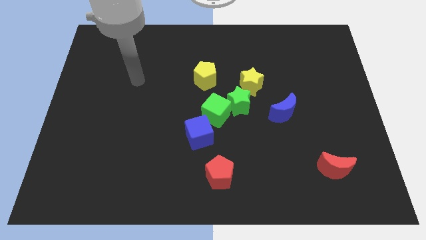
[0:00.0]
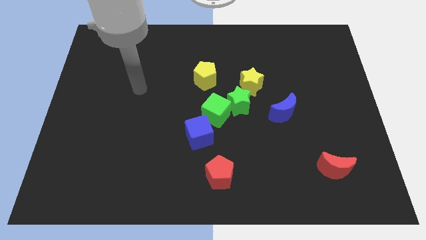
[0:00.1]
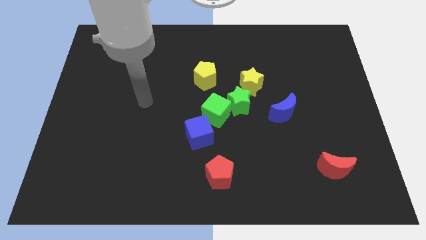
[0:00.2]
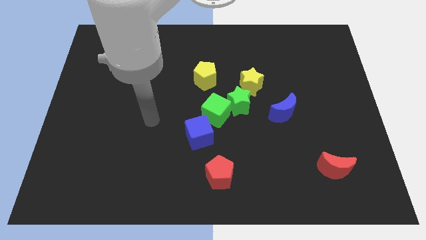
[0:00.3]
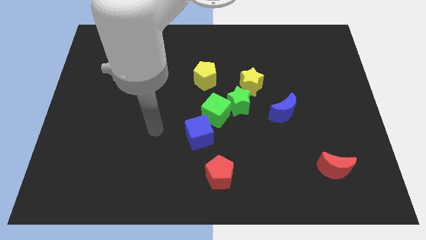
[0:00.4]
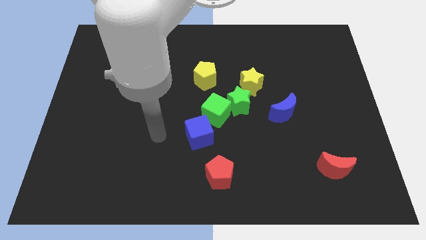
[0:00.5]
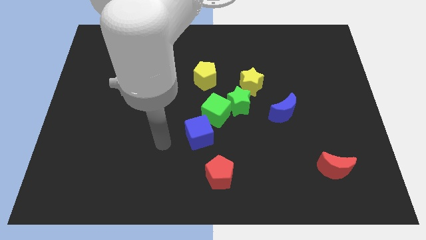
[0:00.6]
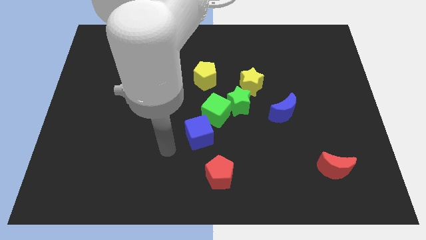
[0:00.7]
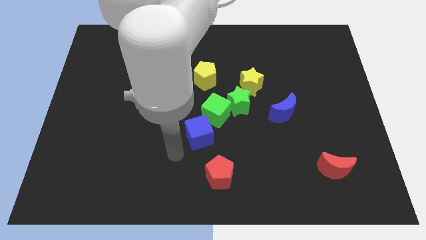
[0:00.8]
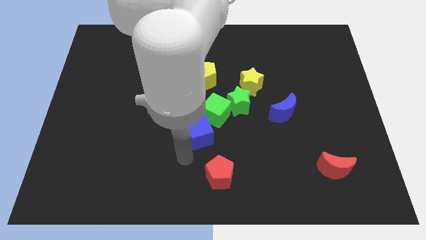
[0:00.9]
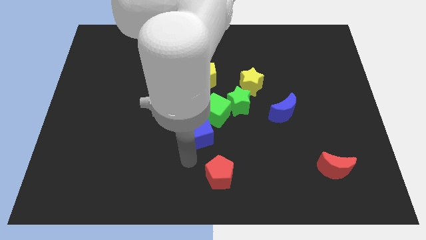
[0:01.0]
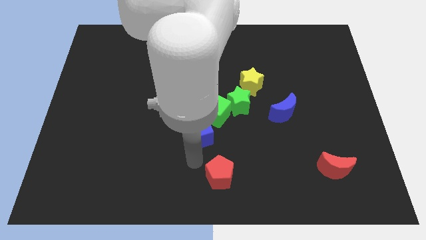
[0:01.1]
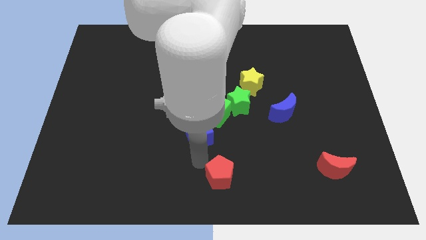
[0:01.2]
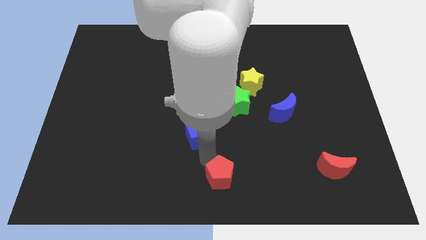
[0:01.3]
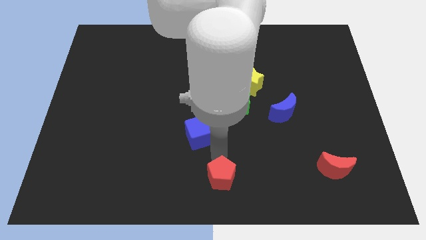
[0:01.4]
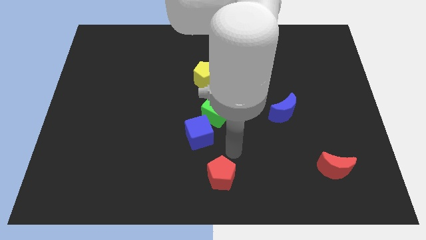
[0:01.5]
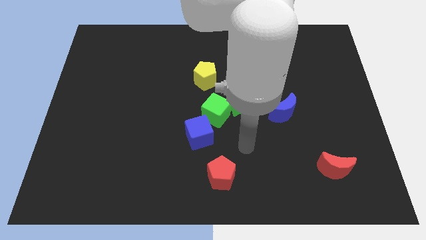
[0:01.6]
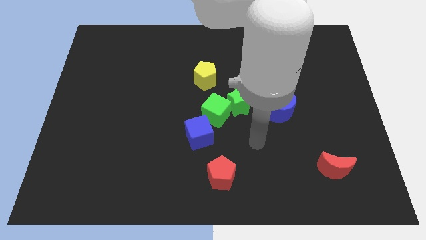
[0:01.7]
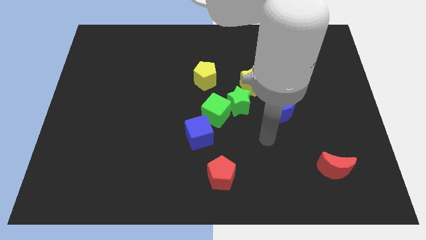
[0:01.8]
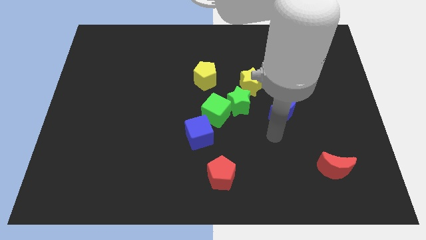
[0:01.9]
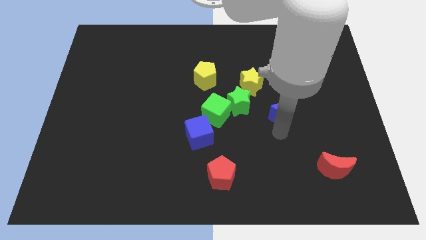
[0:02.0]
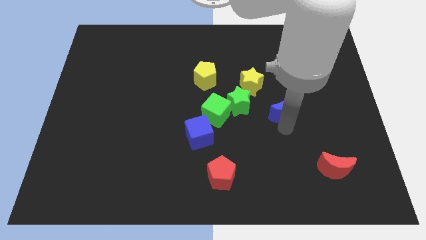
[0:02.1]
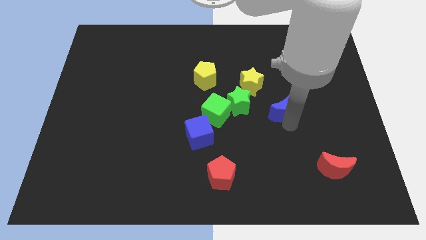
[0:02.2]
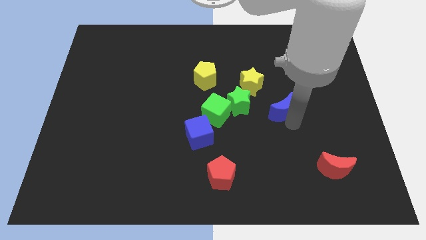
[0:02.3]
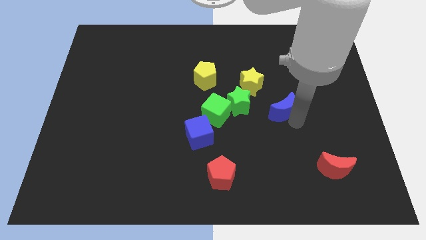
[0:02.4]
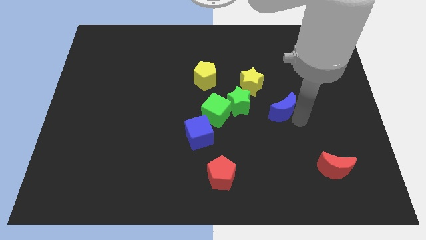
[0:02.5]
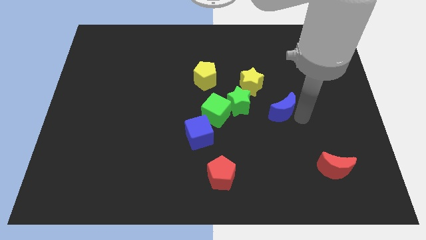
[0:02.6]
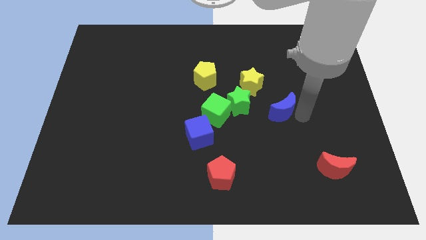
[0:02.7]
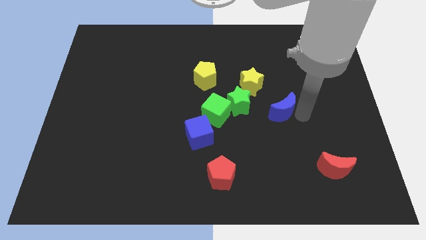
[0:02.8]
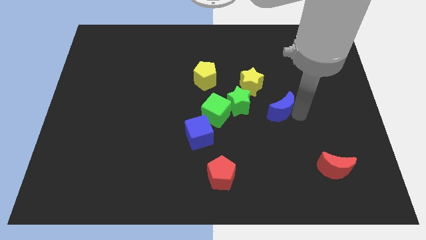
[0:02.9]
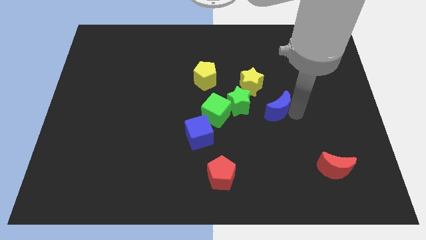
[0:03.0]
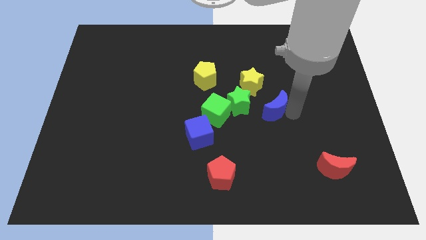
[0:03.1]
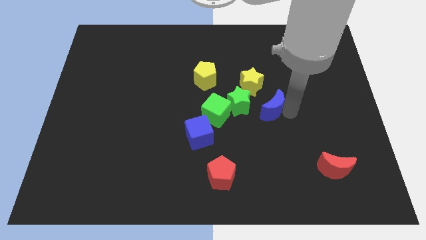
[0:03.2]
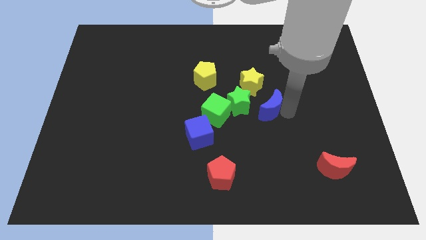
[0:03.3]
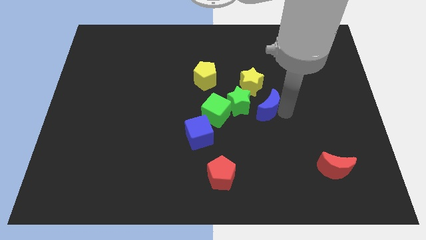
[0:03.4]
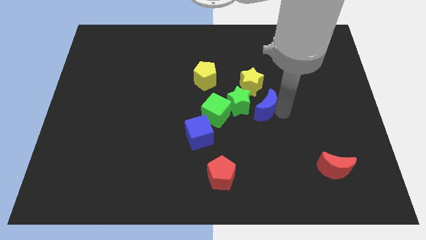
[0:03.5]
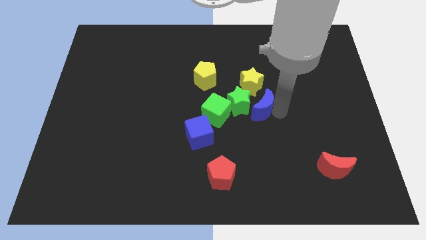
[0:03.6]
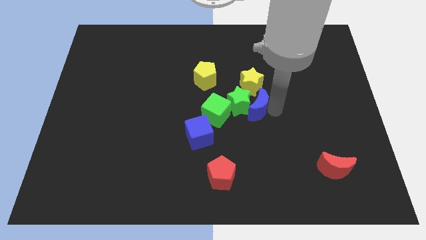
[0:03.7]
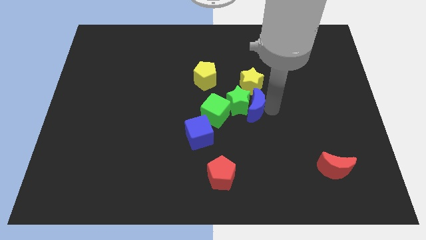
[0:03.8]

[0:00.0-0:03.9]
put the blue moon to the green star

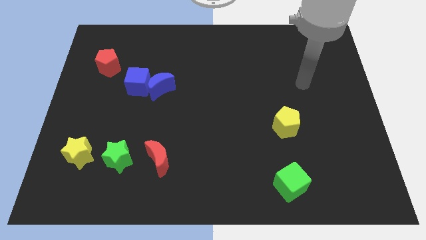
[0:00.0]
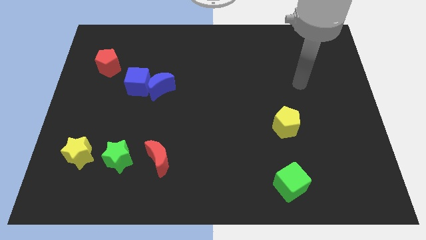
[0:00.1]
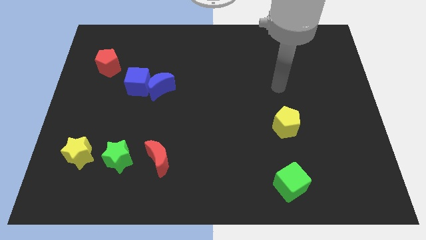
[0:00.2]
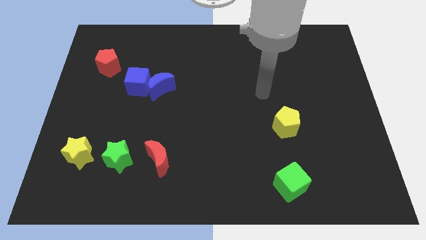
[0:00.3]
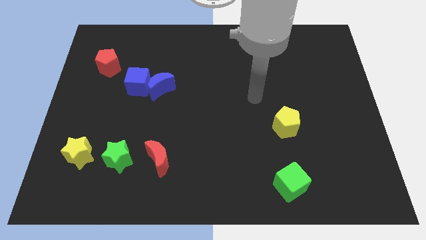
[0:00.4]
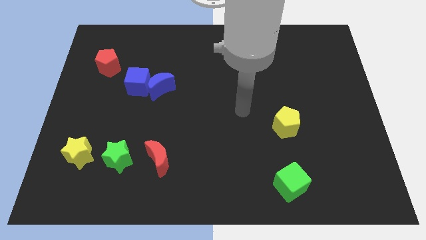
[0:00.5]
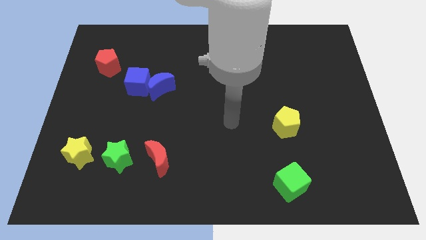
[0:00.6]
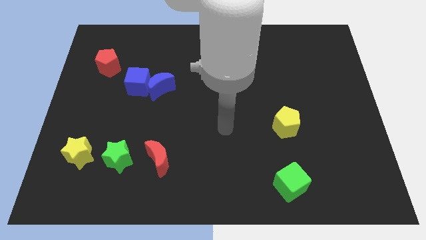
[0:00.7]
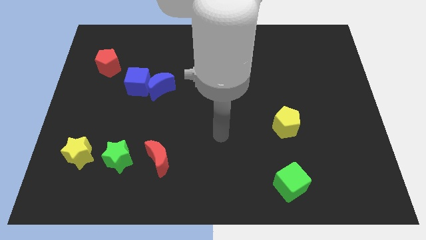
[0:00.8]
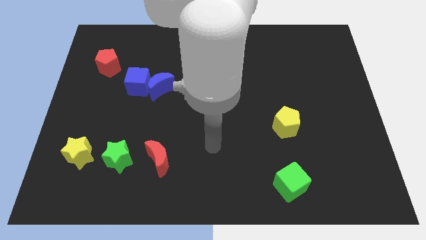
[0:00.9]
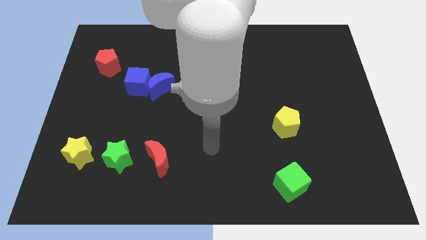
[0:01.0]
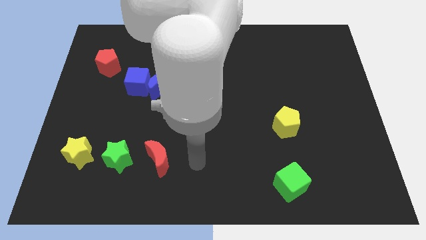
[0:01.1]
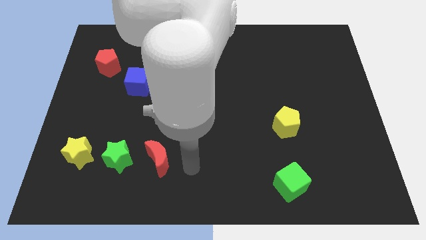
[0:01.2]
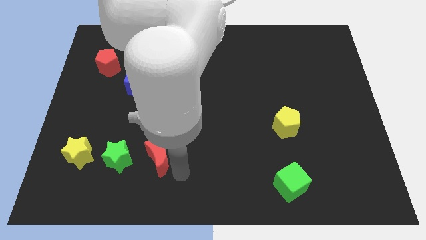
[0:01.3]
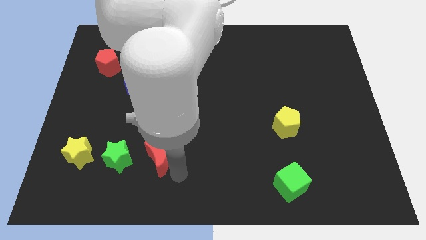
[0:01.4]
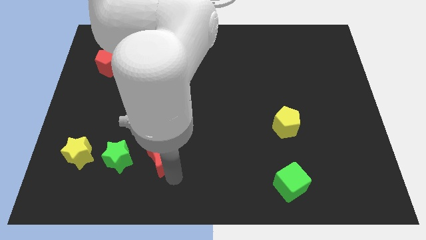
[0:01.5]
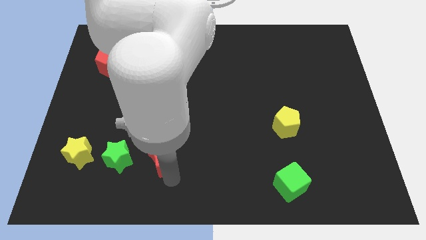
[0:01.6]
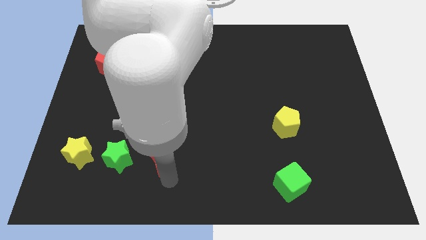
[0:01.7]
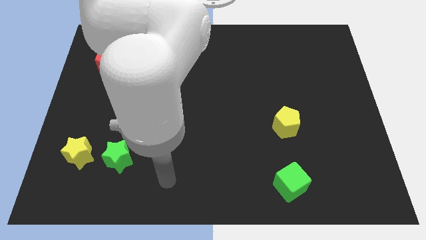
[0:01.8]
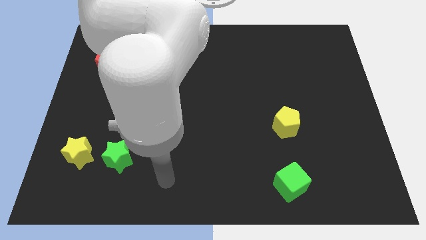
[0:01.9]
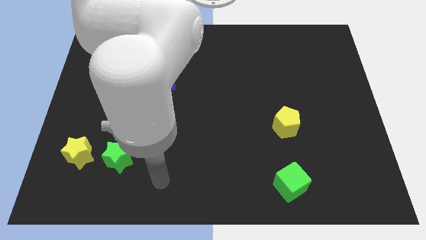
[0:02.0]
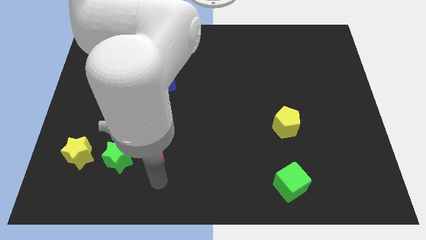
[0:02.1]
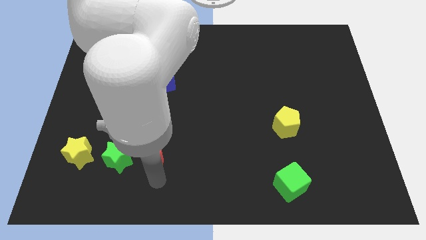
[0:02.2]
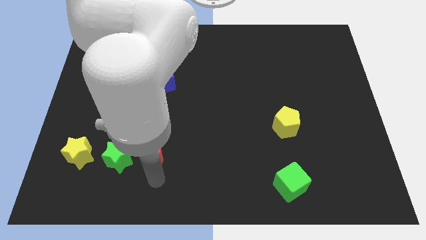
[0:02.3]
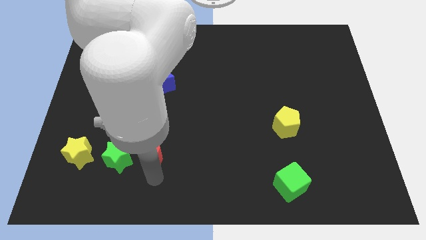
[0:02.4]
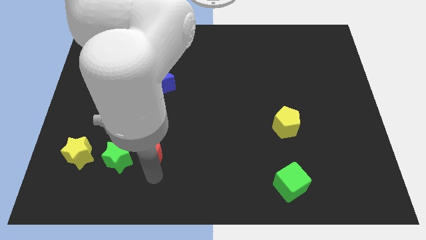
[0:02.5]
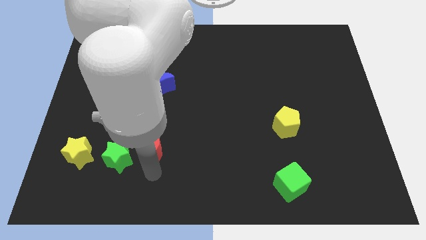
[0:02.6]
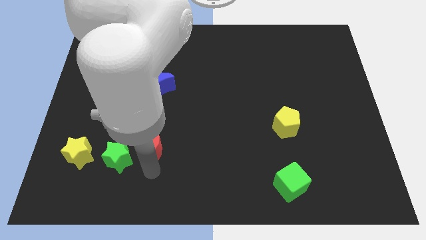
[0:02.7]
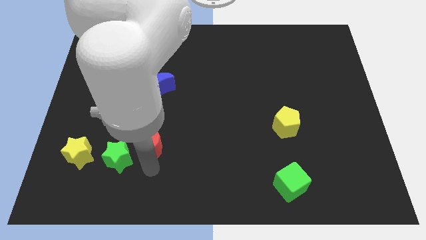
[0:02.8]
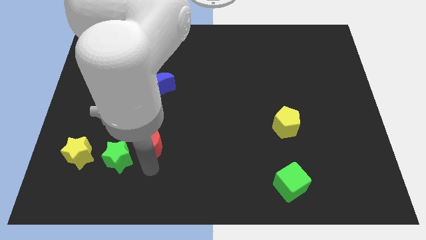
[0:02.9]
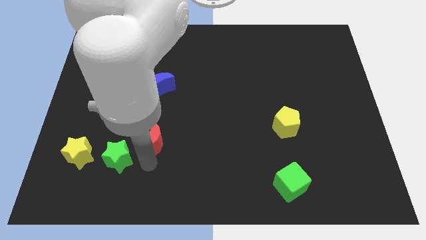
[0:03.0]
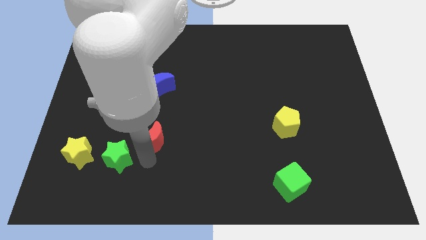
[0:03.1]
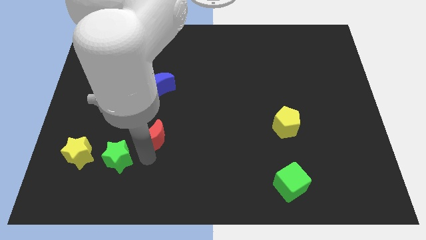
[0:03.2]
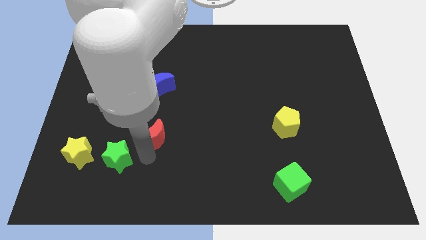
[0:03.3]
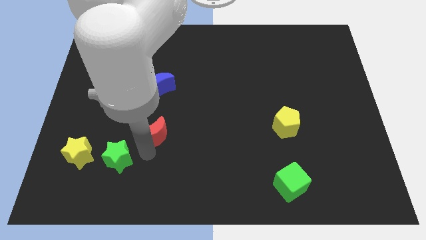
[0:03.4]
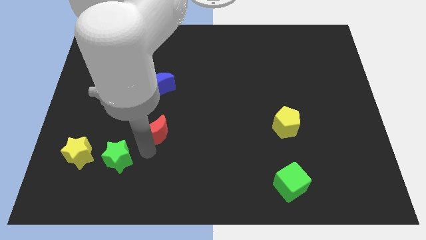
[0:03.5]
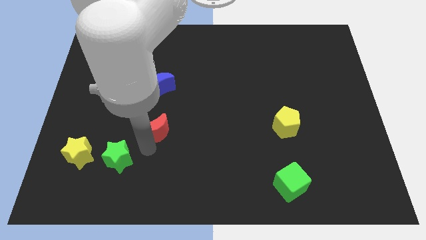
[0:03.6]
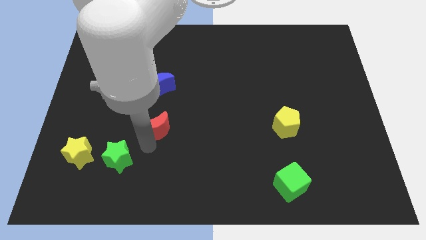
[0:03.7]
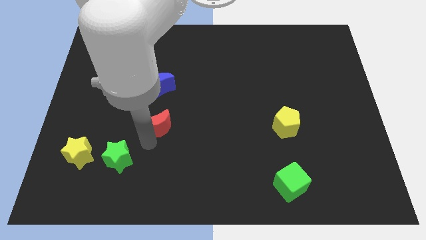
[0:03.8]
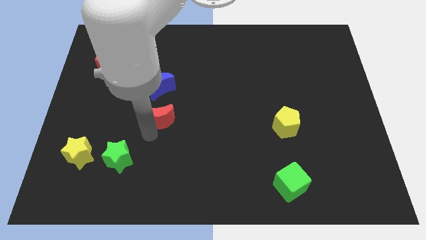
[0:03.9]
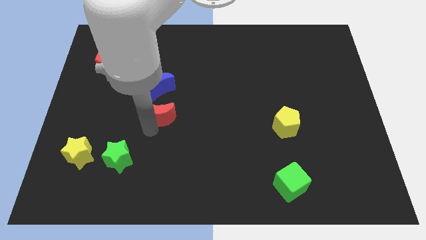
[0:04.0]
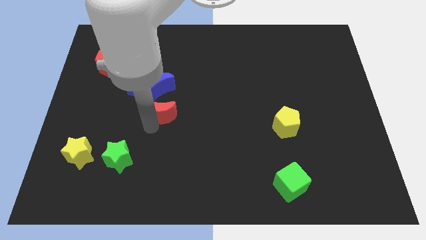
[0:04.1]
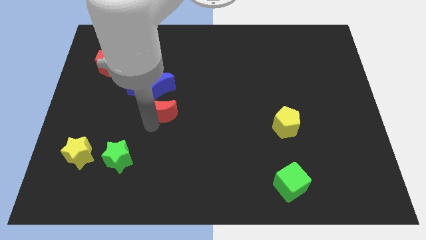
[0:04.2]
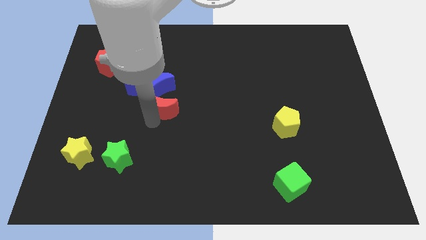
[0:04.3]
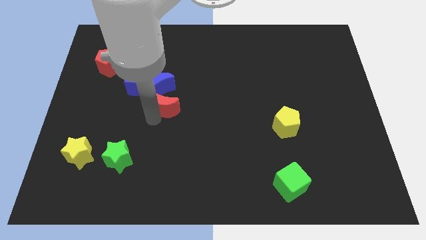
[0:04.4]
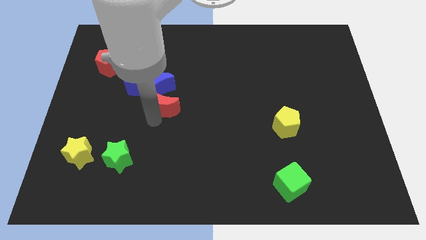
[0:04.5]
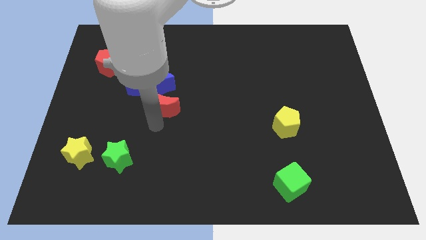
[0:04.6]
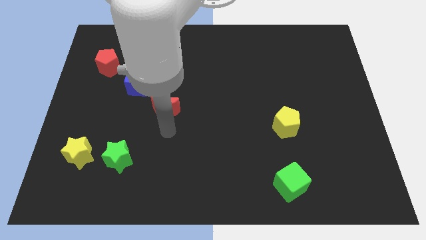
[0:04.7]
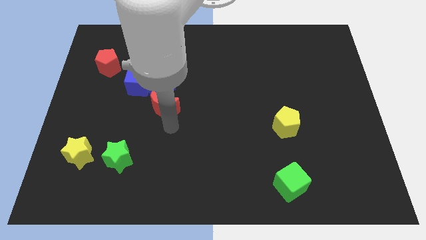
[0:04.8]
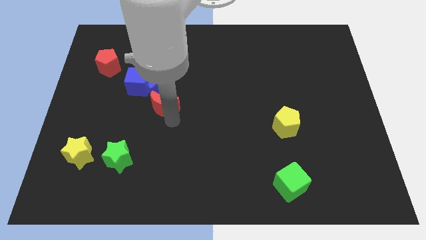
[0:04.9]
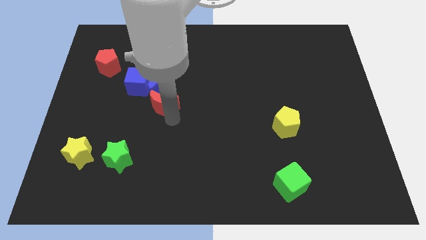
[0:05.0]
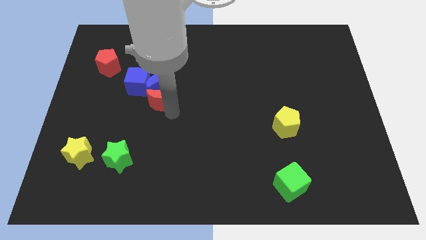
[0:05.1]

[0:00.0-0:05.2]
put the red moon towards the blue moon
